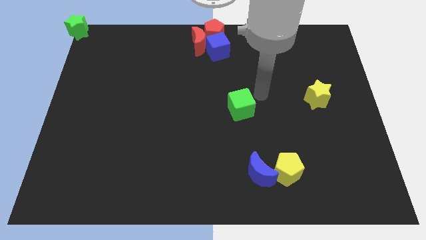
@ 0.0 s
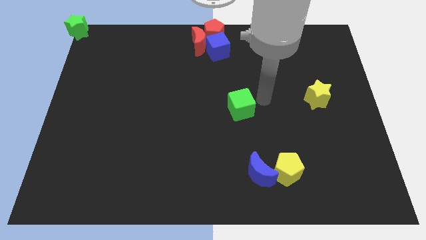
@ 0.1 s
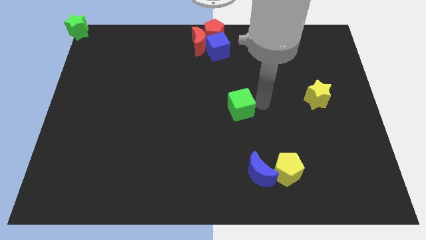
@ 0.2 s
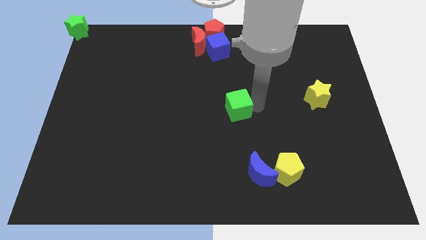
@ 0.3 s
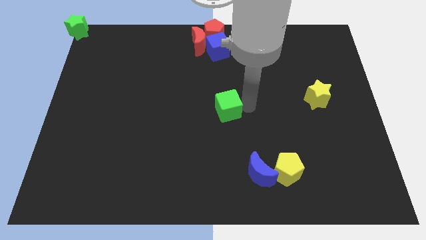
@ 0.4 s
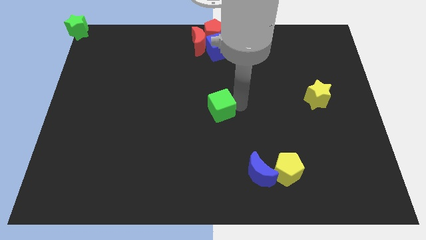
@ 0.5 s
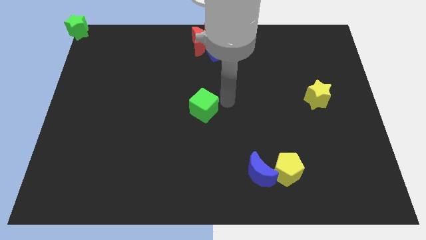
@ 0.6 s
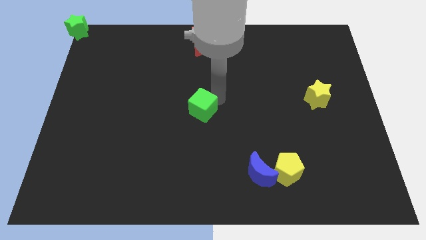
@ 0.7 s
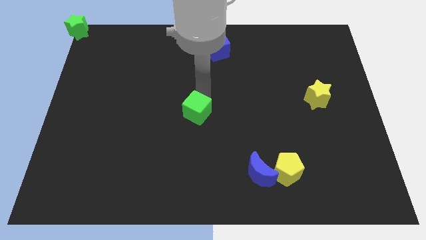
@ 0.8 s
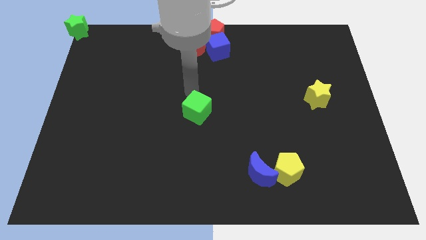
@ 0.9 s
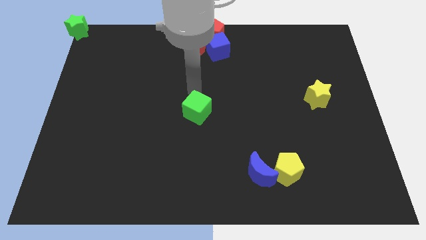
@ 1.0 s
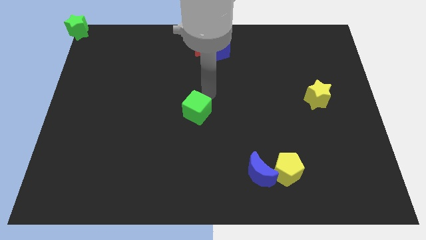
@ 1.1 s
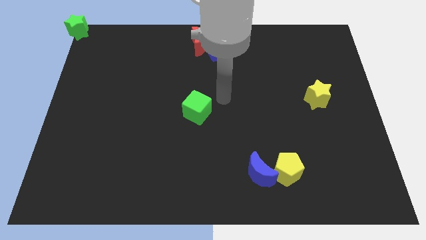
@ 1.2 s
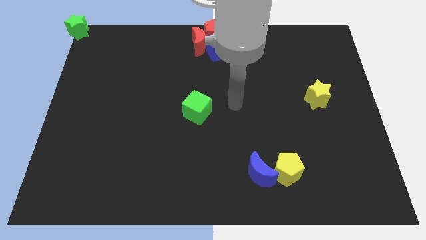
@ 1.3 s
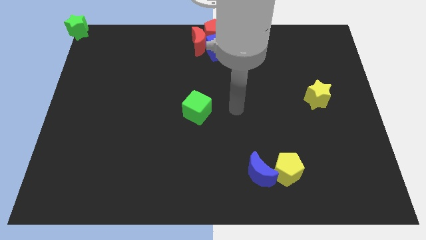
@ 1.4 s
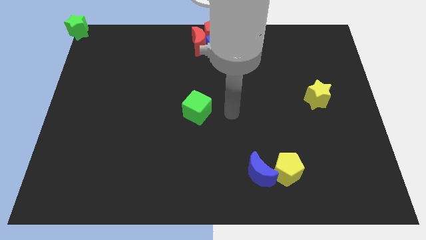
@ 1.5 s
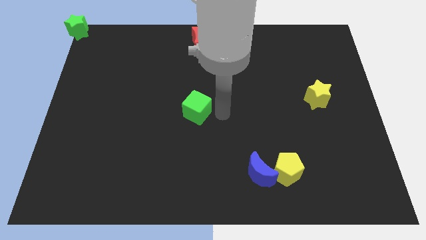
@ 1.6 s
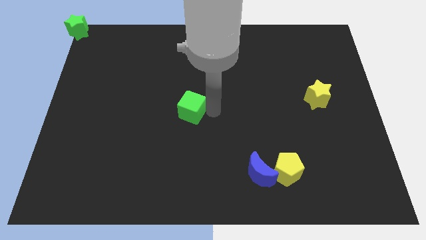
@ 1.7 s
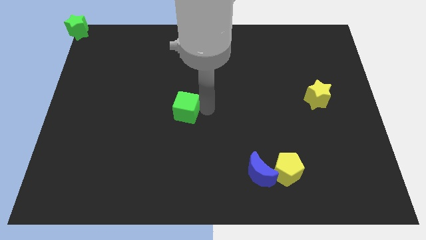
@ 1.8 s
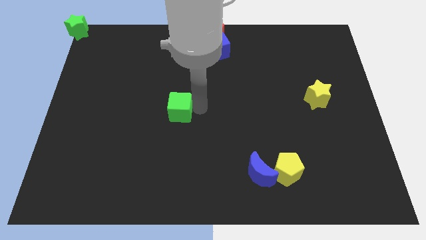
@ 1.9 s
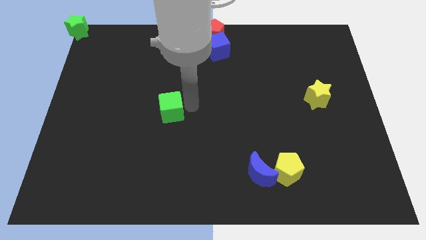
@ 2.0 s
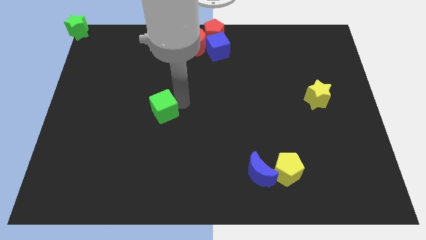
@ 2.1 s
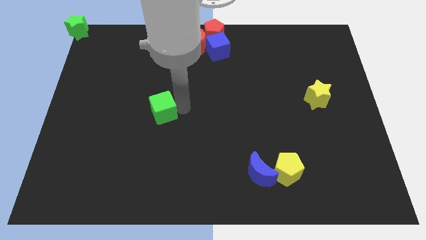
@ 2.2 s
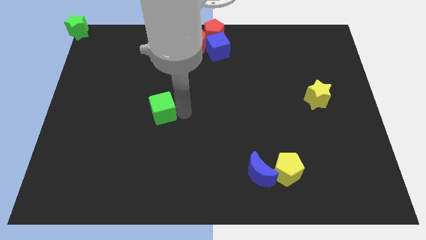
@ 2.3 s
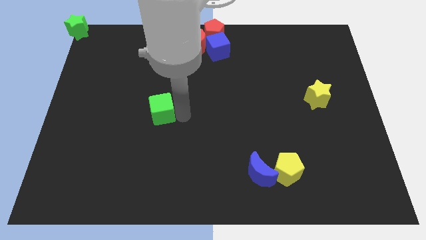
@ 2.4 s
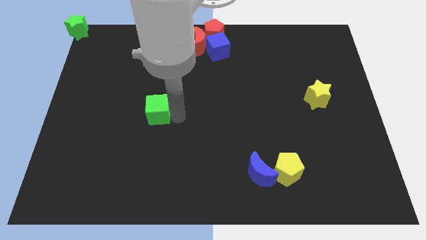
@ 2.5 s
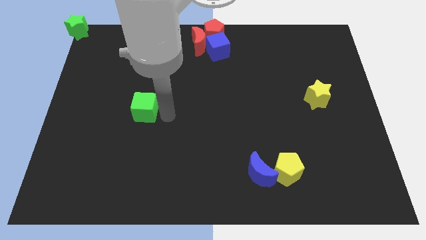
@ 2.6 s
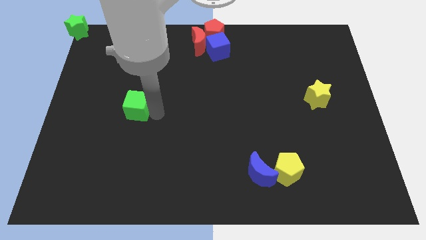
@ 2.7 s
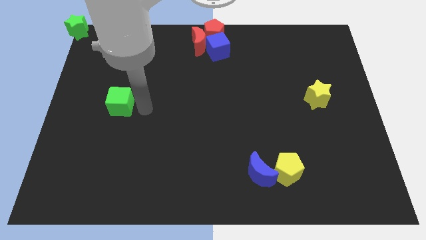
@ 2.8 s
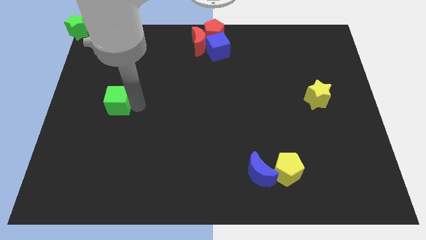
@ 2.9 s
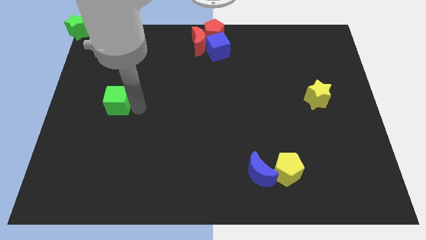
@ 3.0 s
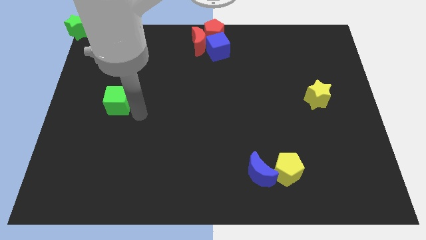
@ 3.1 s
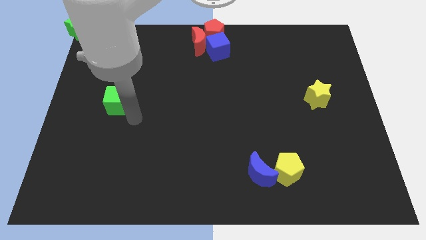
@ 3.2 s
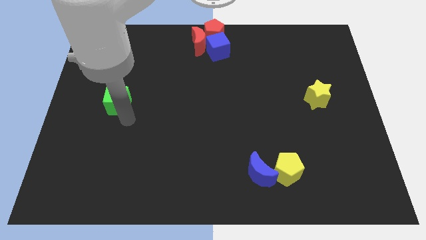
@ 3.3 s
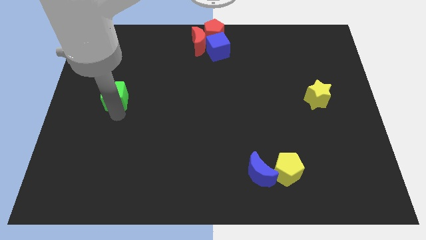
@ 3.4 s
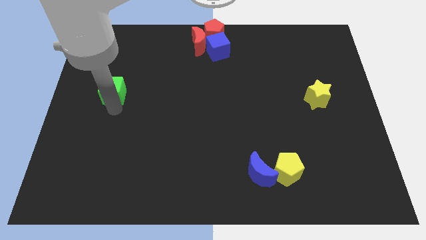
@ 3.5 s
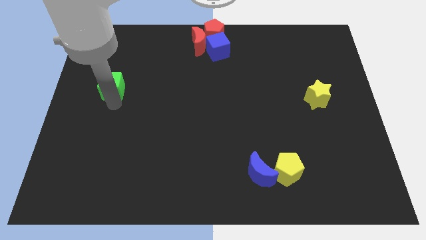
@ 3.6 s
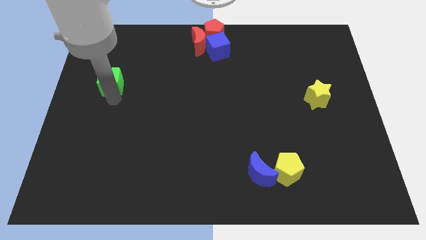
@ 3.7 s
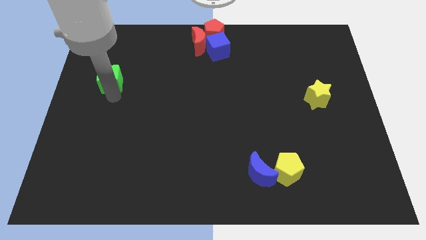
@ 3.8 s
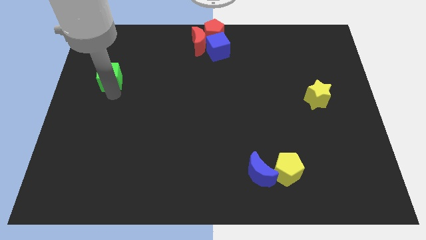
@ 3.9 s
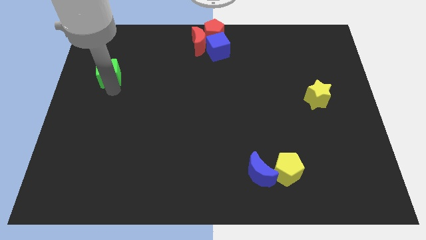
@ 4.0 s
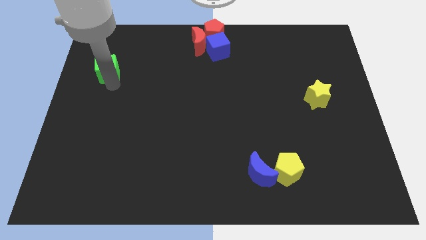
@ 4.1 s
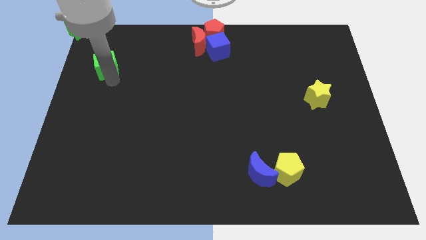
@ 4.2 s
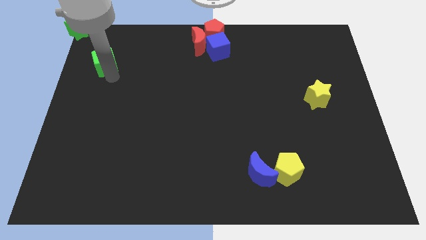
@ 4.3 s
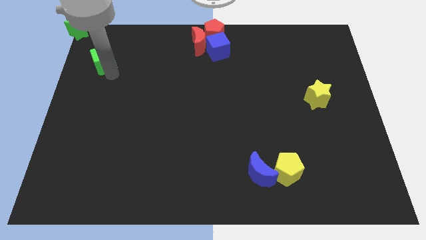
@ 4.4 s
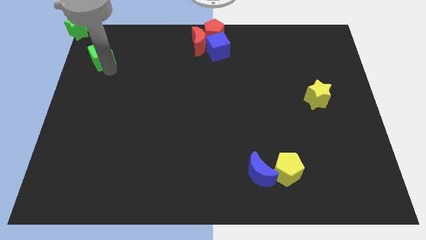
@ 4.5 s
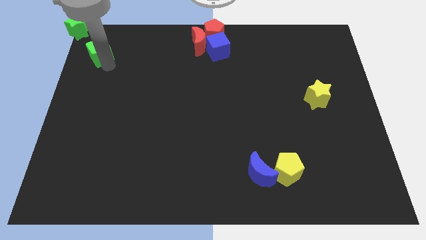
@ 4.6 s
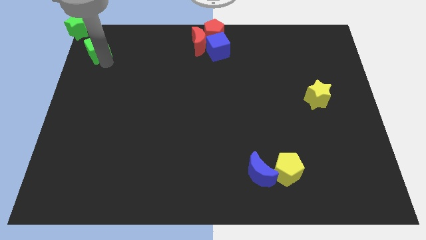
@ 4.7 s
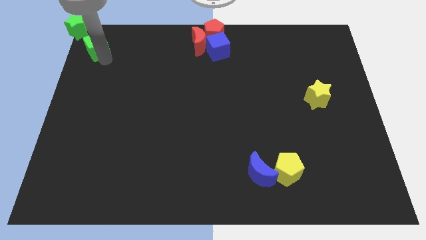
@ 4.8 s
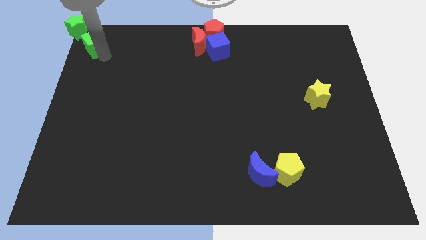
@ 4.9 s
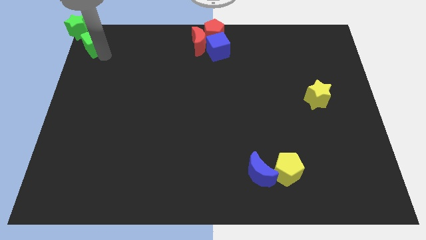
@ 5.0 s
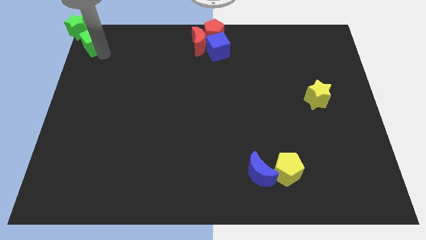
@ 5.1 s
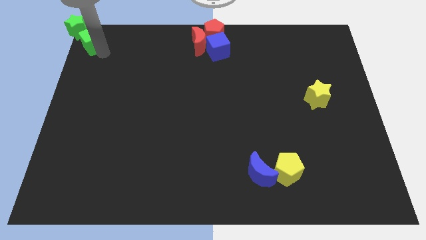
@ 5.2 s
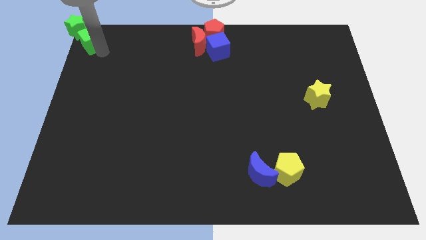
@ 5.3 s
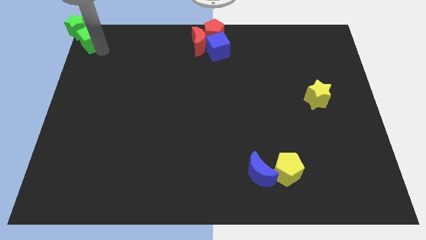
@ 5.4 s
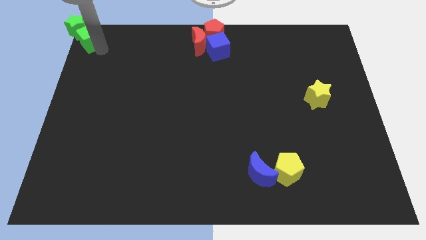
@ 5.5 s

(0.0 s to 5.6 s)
group up the two green blocks at the top left corner of the board

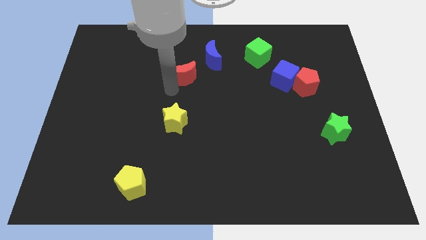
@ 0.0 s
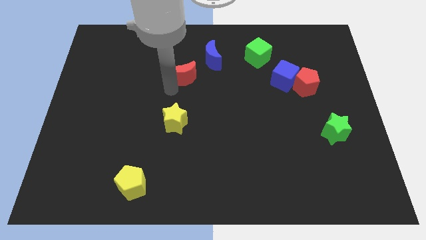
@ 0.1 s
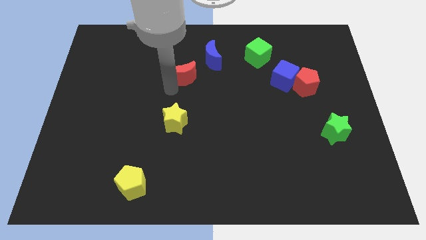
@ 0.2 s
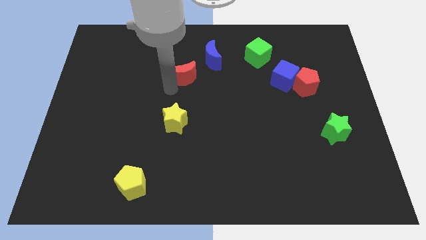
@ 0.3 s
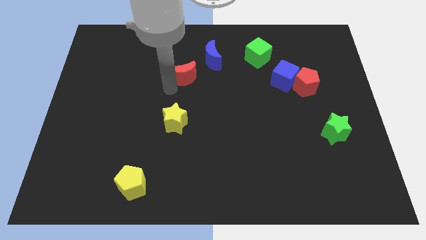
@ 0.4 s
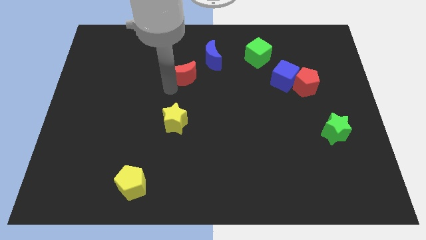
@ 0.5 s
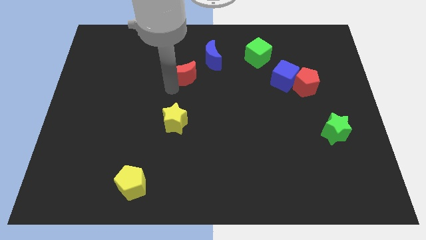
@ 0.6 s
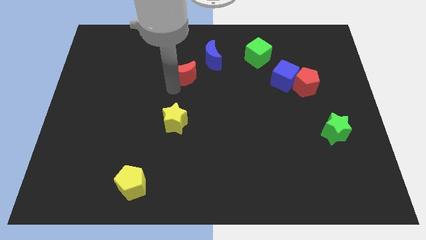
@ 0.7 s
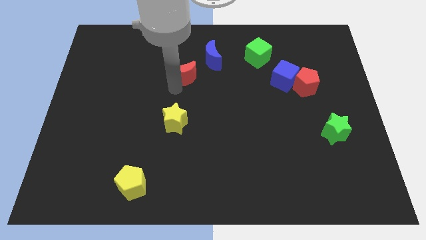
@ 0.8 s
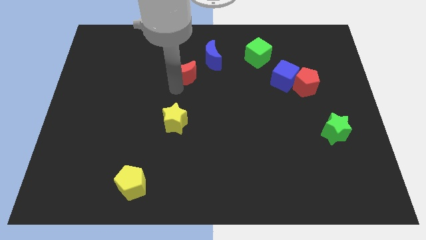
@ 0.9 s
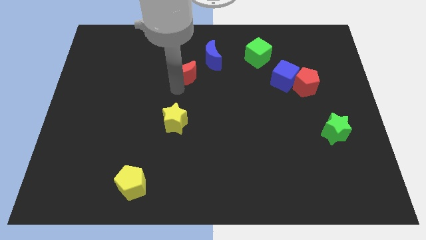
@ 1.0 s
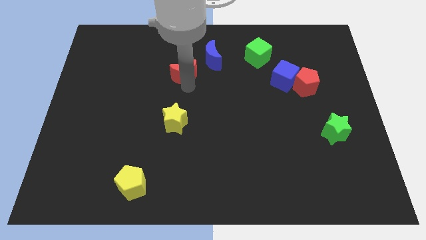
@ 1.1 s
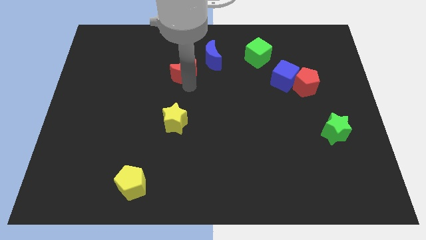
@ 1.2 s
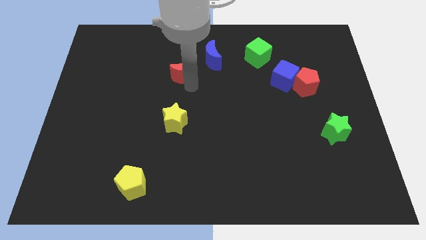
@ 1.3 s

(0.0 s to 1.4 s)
move your arm close to the red moon

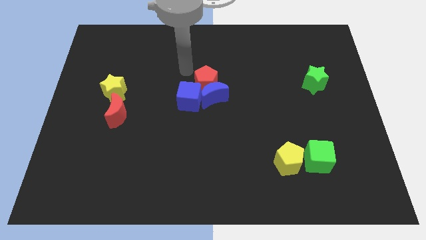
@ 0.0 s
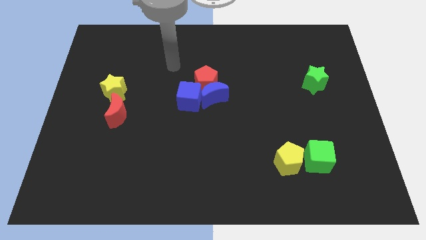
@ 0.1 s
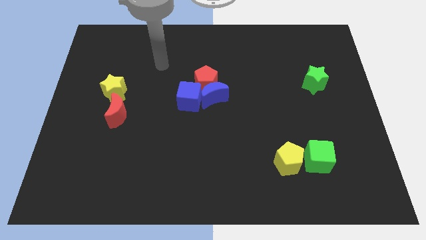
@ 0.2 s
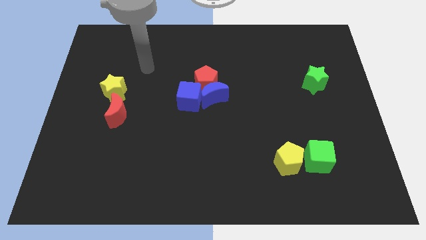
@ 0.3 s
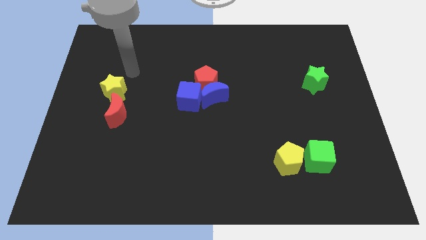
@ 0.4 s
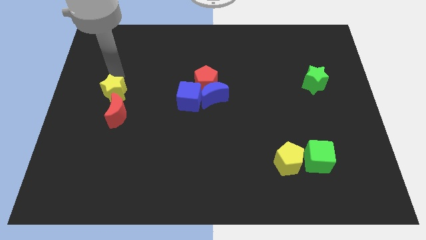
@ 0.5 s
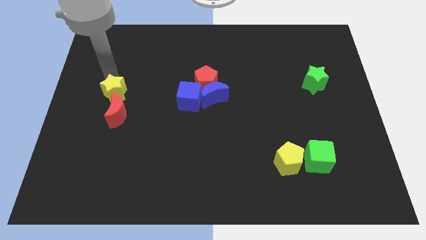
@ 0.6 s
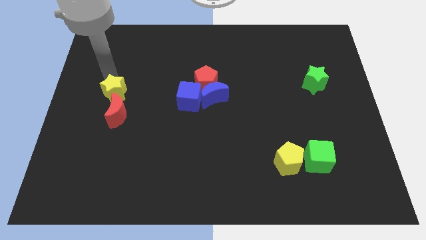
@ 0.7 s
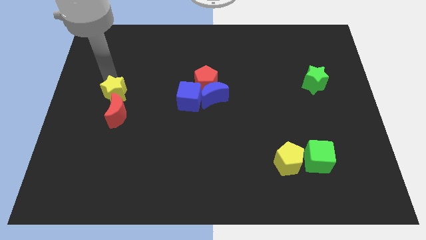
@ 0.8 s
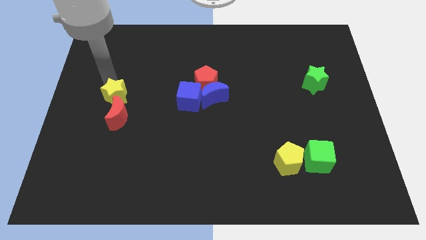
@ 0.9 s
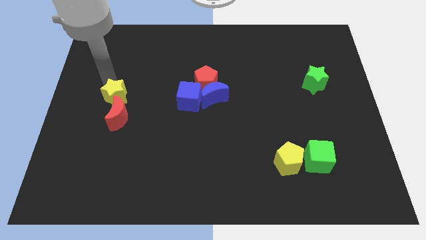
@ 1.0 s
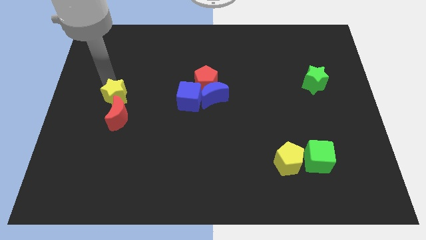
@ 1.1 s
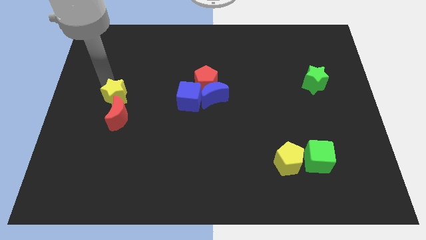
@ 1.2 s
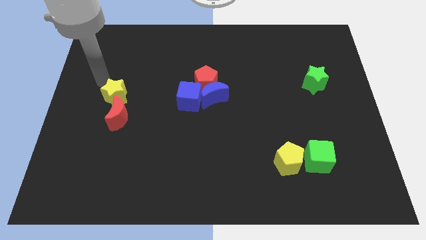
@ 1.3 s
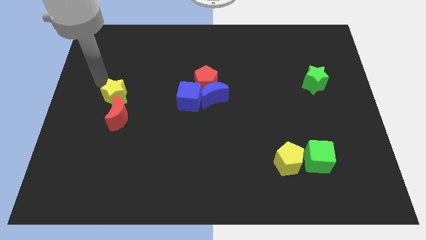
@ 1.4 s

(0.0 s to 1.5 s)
make the yellow star to touch the top side of the red crescent

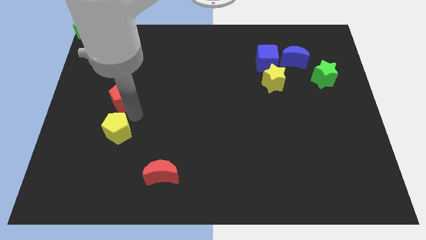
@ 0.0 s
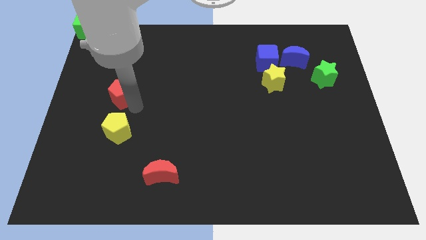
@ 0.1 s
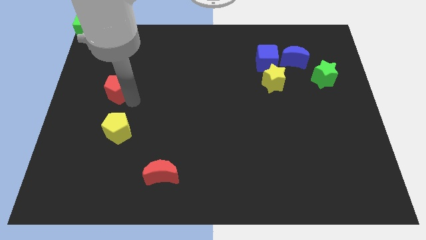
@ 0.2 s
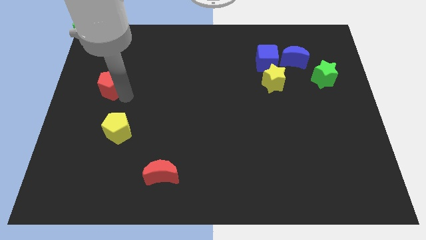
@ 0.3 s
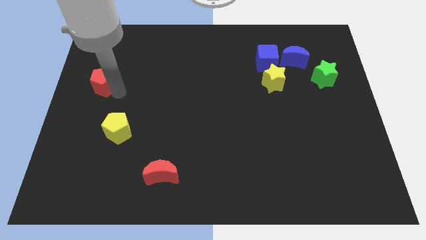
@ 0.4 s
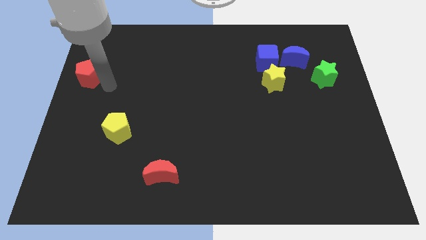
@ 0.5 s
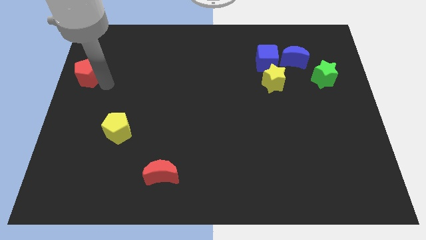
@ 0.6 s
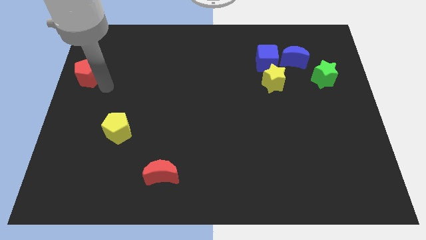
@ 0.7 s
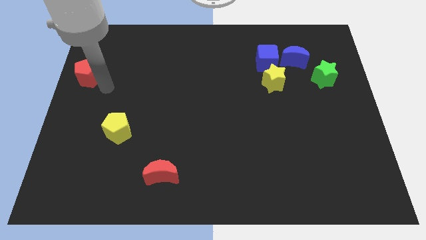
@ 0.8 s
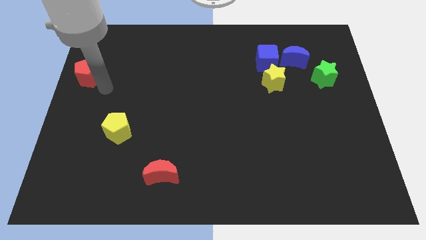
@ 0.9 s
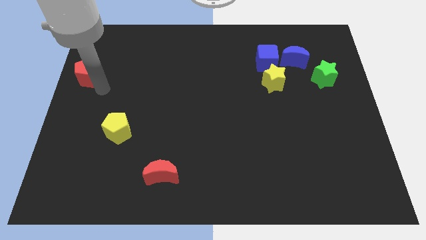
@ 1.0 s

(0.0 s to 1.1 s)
separate red pentagon from yellow pentagon
